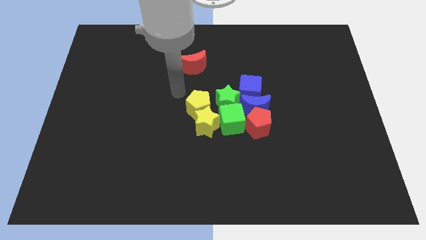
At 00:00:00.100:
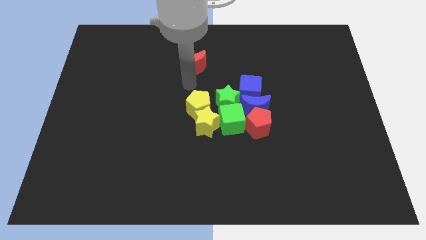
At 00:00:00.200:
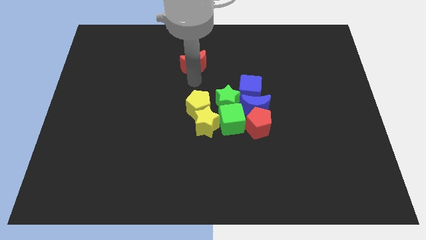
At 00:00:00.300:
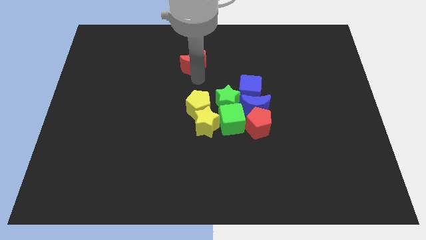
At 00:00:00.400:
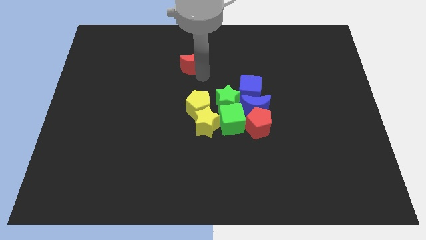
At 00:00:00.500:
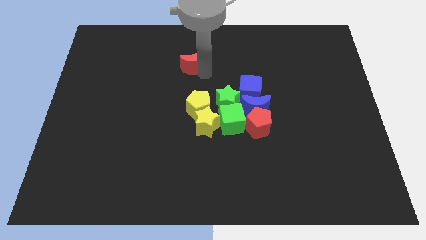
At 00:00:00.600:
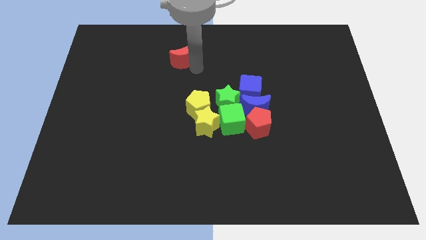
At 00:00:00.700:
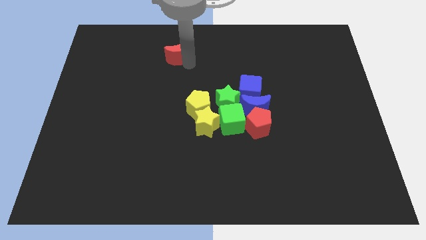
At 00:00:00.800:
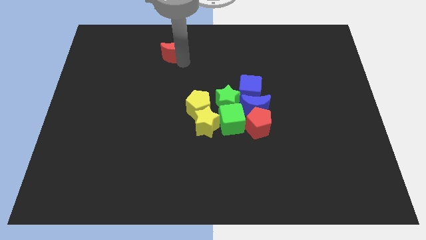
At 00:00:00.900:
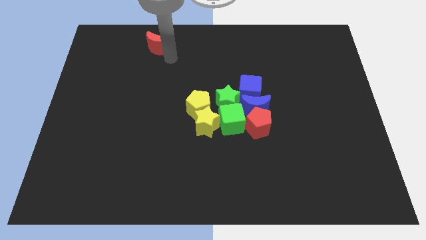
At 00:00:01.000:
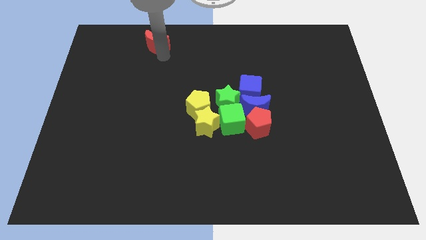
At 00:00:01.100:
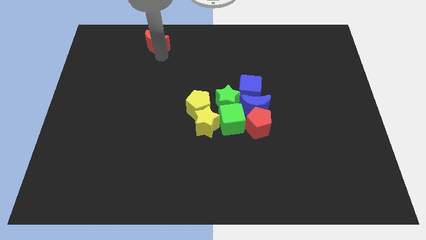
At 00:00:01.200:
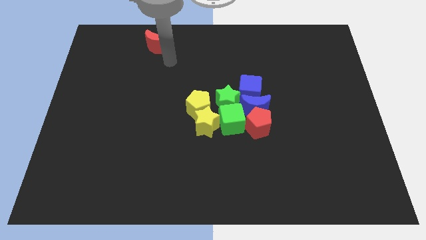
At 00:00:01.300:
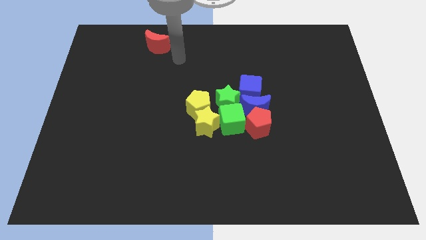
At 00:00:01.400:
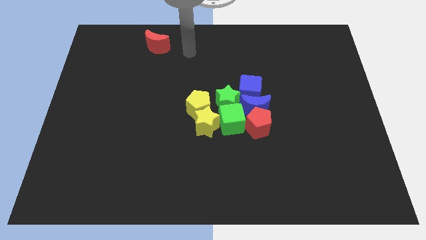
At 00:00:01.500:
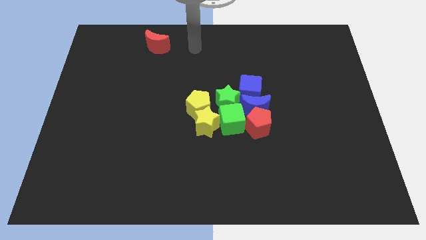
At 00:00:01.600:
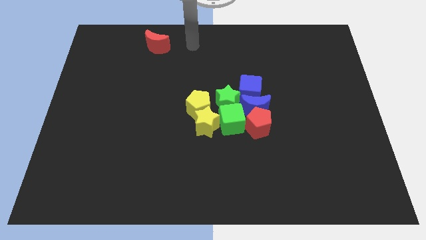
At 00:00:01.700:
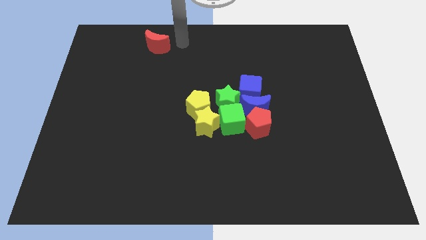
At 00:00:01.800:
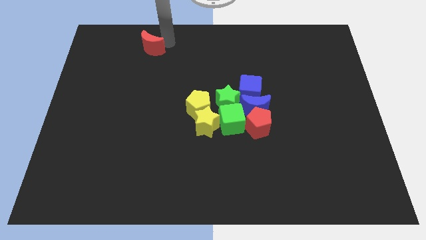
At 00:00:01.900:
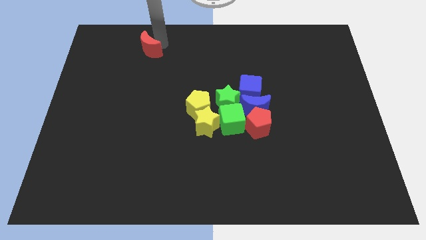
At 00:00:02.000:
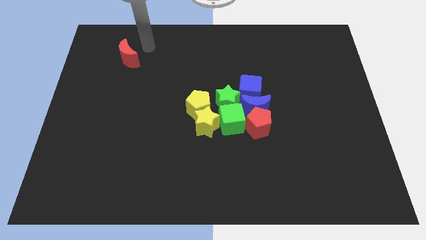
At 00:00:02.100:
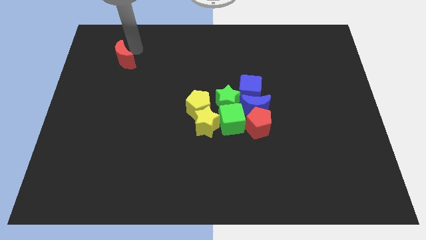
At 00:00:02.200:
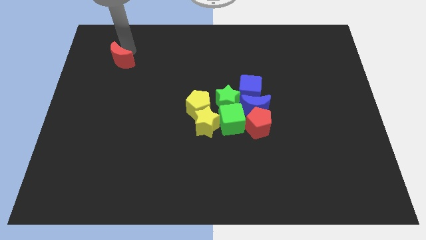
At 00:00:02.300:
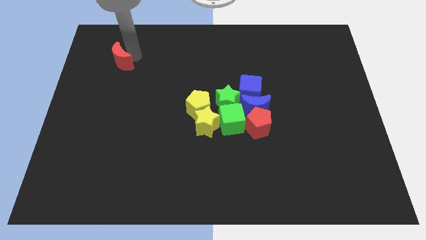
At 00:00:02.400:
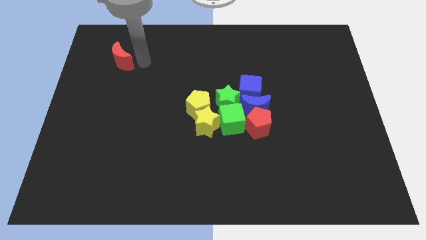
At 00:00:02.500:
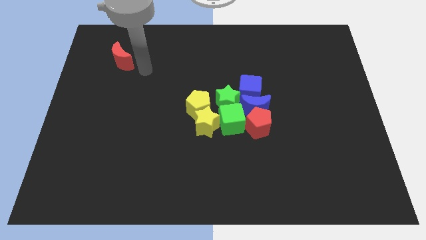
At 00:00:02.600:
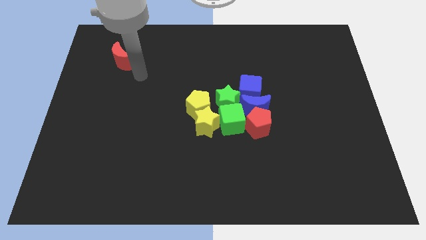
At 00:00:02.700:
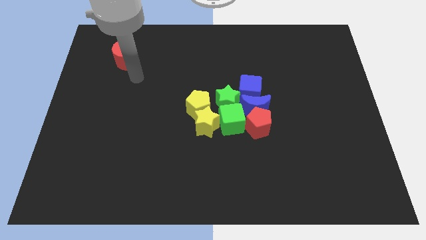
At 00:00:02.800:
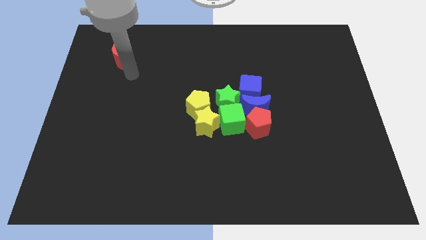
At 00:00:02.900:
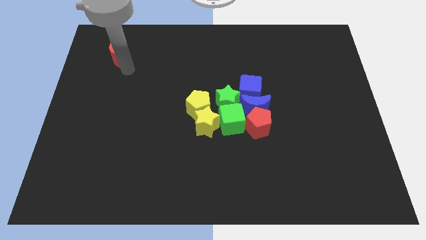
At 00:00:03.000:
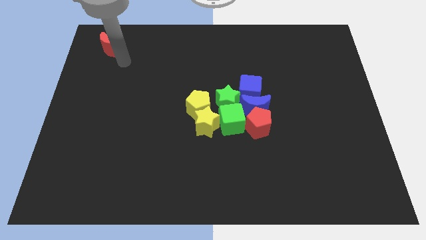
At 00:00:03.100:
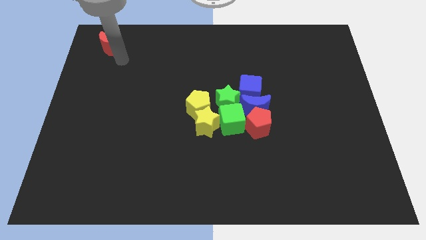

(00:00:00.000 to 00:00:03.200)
move the red crescent to the top left of the board

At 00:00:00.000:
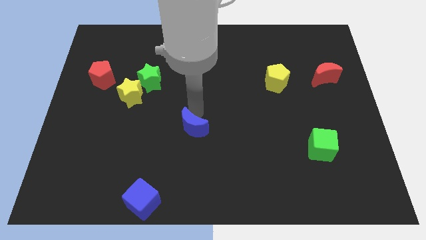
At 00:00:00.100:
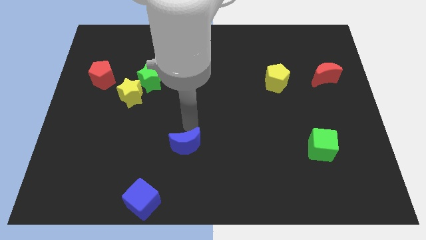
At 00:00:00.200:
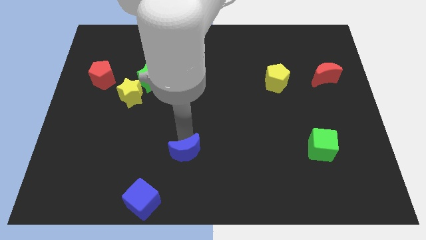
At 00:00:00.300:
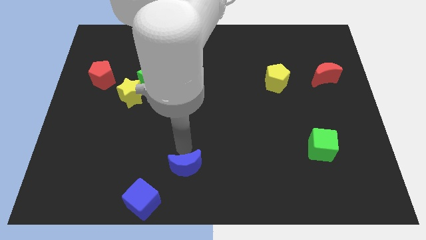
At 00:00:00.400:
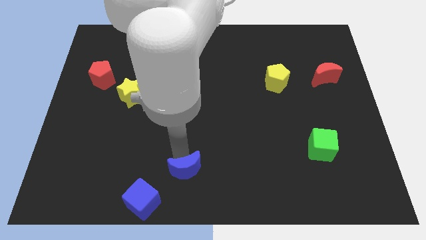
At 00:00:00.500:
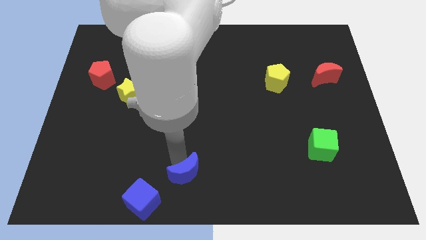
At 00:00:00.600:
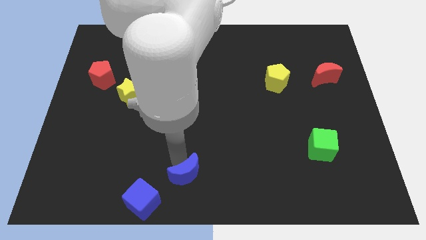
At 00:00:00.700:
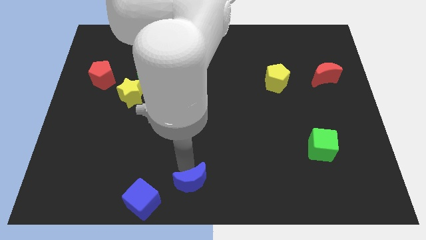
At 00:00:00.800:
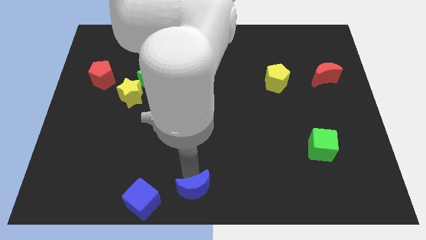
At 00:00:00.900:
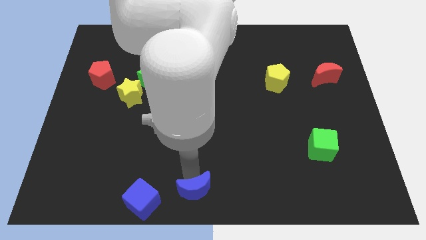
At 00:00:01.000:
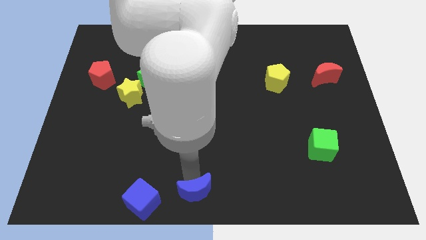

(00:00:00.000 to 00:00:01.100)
slide blue moon to the right of blue cube

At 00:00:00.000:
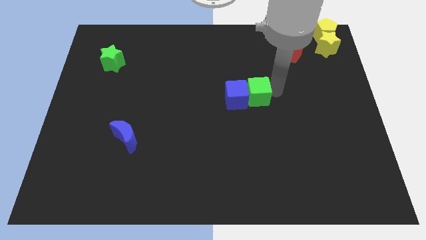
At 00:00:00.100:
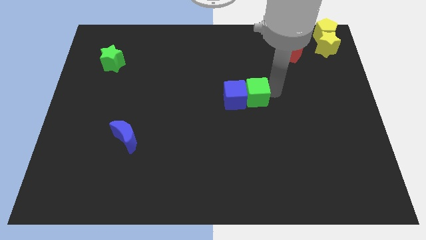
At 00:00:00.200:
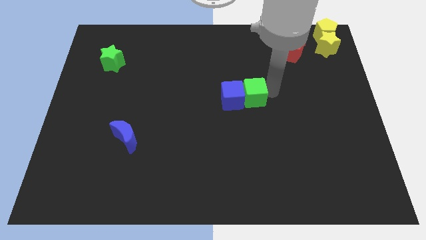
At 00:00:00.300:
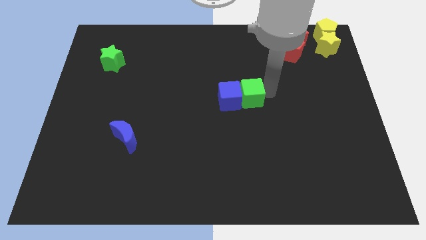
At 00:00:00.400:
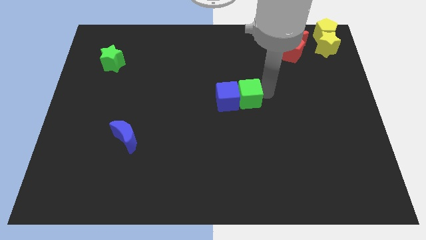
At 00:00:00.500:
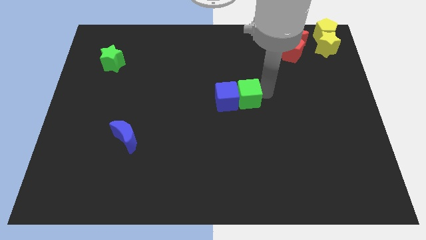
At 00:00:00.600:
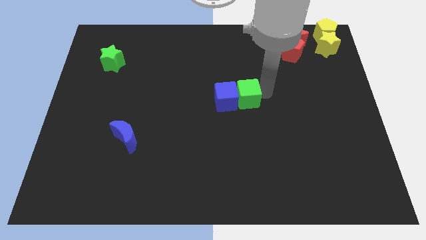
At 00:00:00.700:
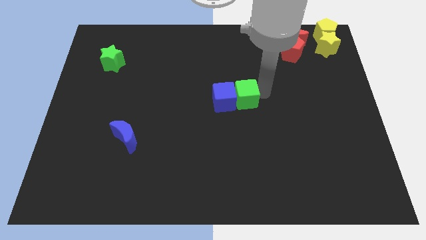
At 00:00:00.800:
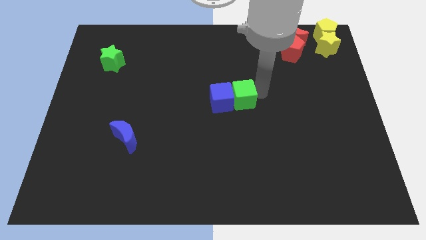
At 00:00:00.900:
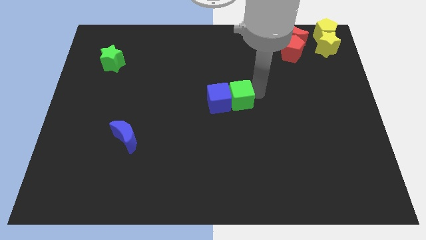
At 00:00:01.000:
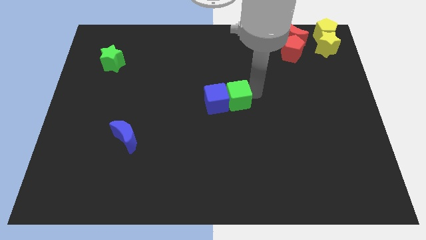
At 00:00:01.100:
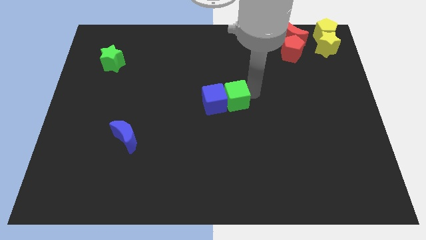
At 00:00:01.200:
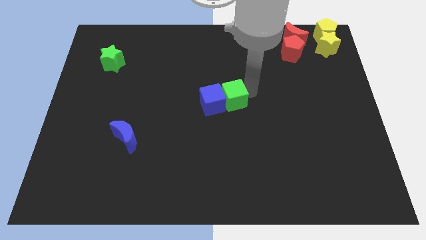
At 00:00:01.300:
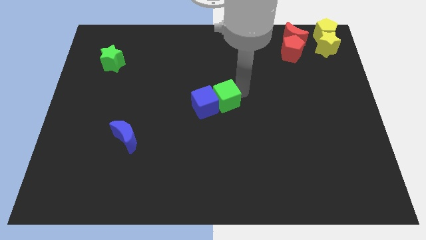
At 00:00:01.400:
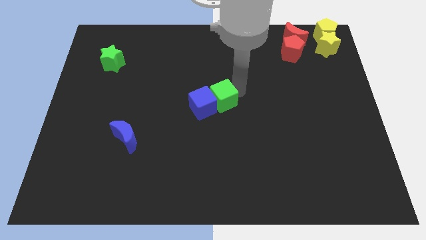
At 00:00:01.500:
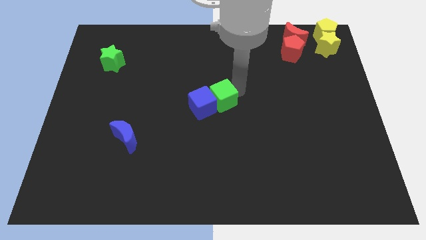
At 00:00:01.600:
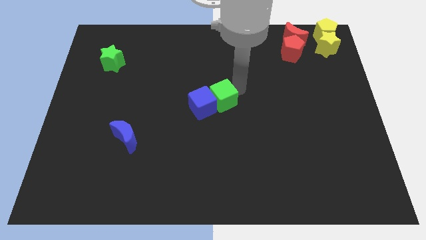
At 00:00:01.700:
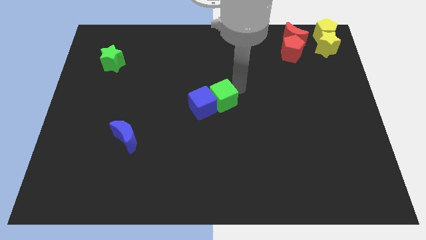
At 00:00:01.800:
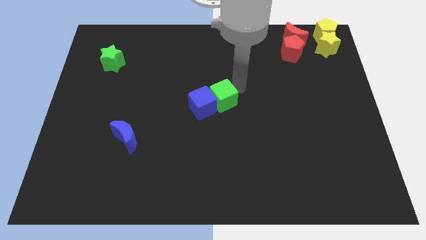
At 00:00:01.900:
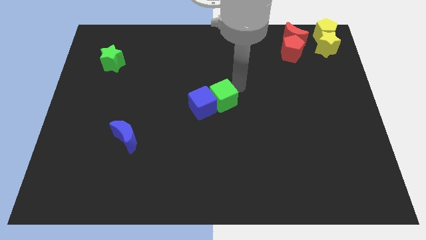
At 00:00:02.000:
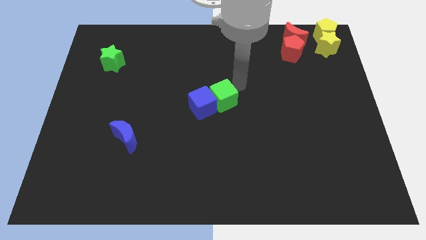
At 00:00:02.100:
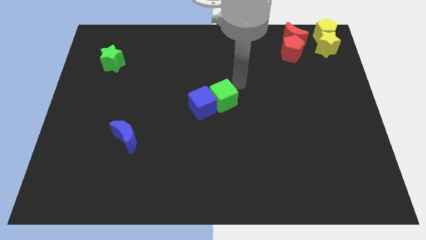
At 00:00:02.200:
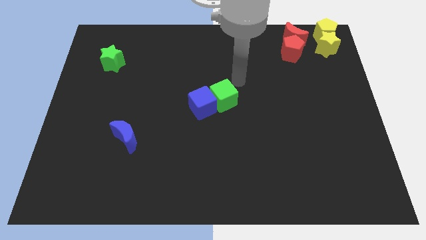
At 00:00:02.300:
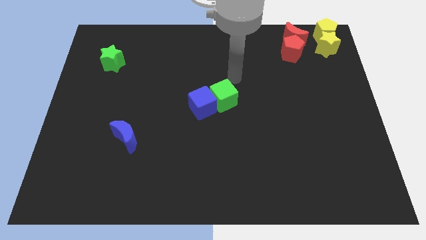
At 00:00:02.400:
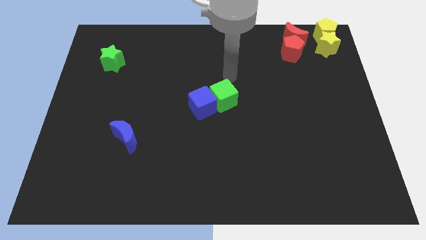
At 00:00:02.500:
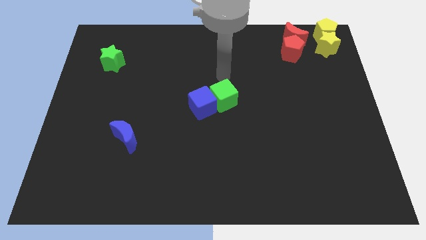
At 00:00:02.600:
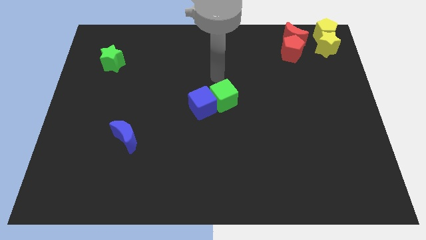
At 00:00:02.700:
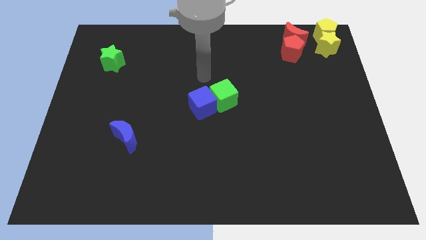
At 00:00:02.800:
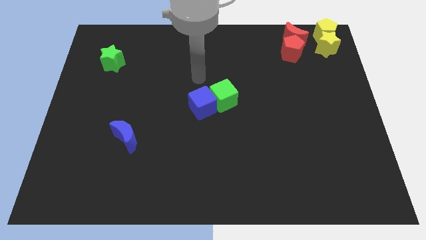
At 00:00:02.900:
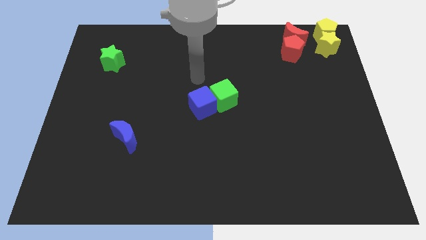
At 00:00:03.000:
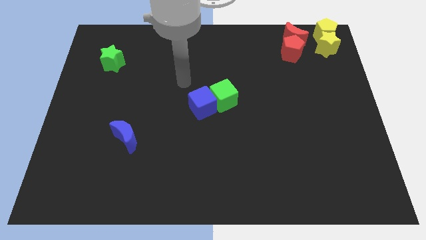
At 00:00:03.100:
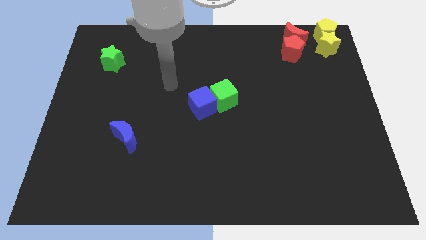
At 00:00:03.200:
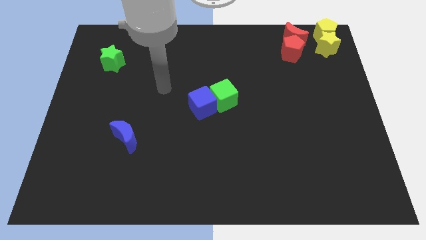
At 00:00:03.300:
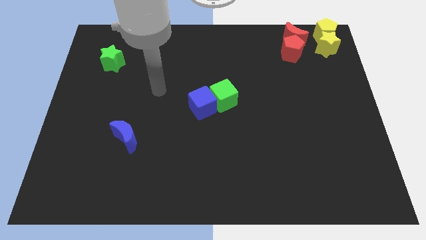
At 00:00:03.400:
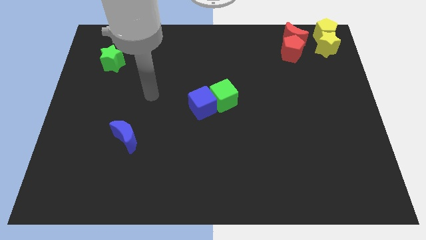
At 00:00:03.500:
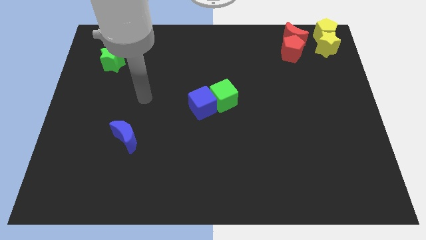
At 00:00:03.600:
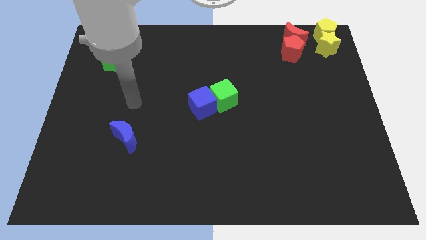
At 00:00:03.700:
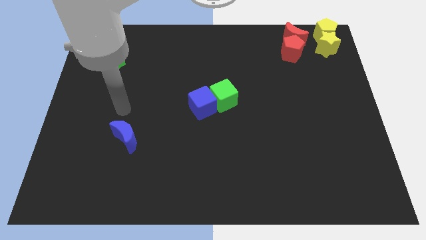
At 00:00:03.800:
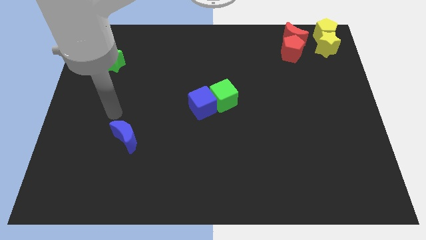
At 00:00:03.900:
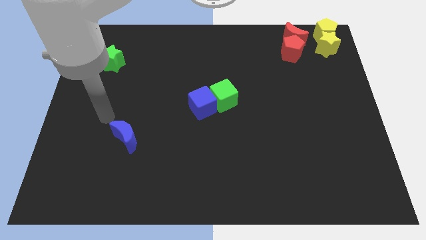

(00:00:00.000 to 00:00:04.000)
go near blue moon

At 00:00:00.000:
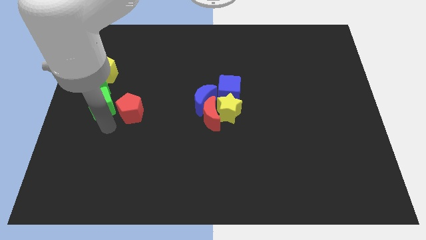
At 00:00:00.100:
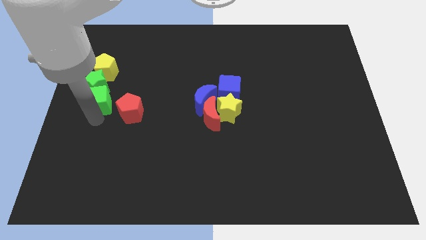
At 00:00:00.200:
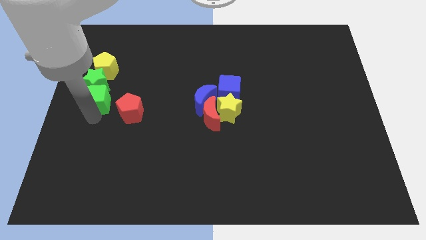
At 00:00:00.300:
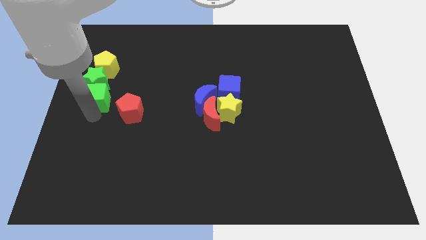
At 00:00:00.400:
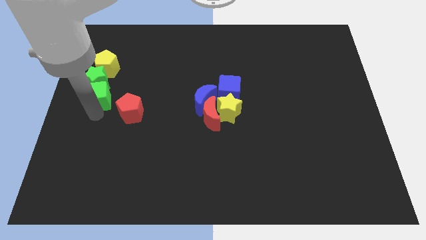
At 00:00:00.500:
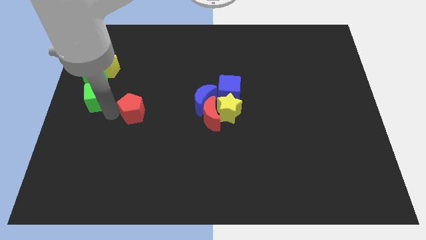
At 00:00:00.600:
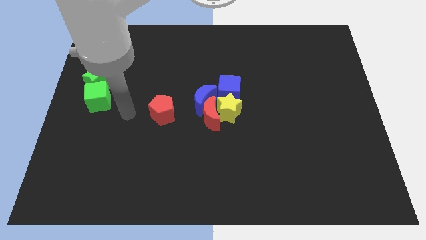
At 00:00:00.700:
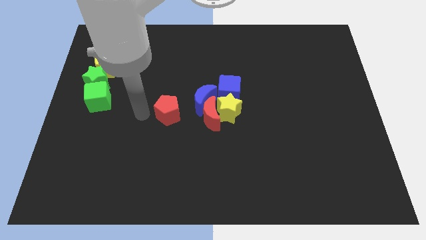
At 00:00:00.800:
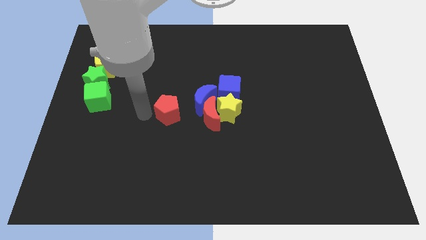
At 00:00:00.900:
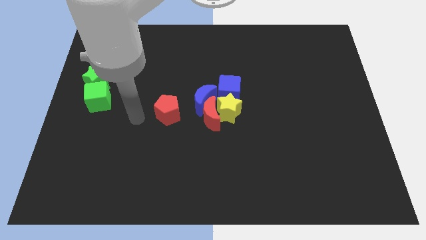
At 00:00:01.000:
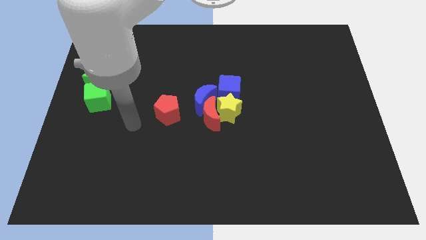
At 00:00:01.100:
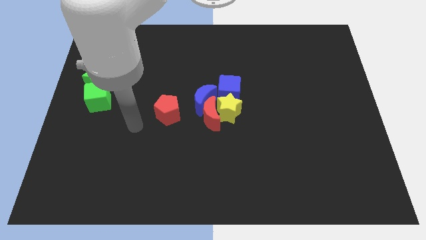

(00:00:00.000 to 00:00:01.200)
move the red pentagon towards the blue moon
